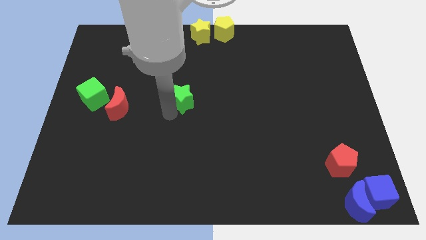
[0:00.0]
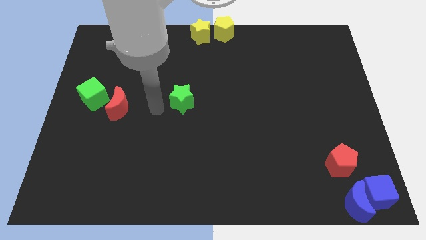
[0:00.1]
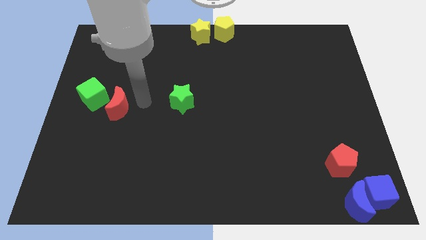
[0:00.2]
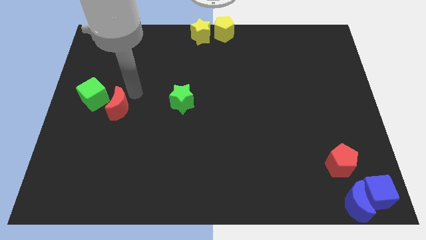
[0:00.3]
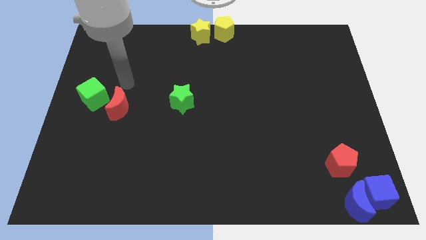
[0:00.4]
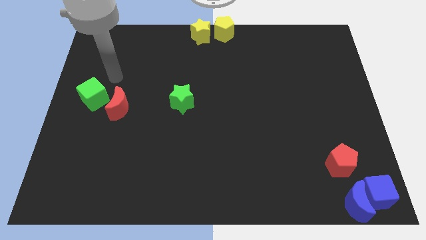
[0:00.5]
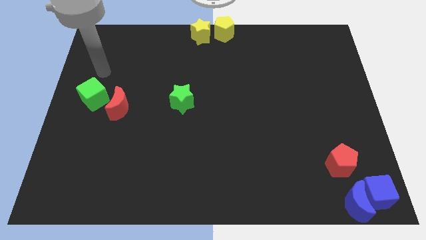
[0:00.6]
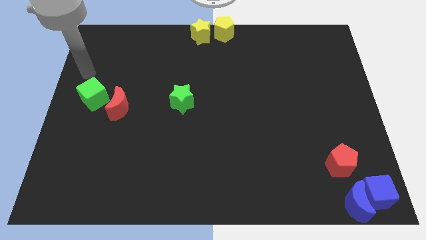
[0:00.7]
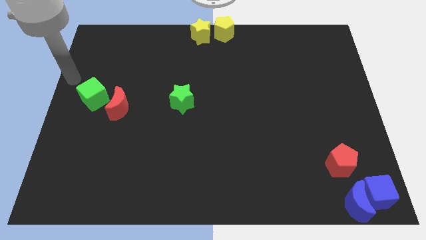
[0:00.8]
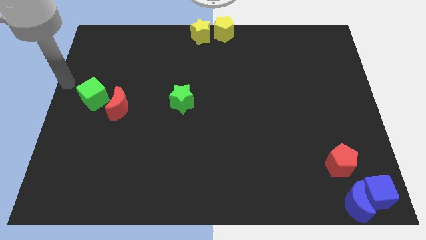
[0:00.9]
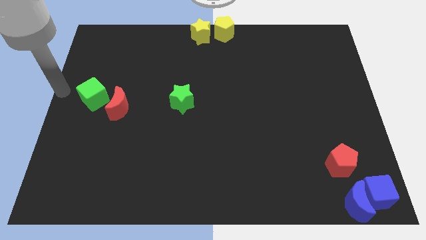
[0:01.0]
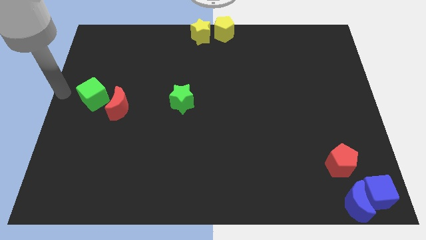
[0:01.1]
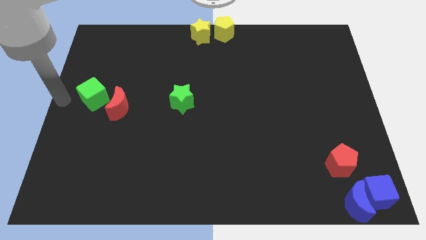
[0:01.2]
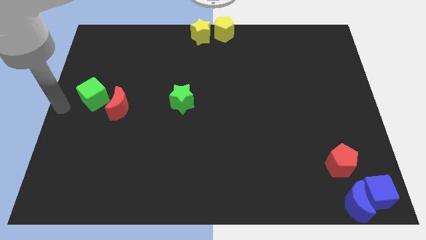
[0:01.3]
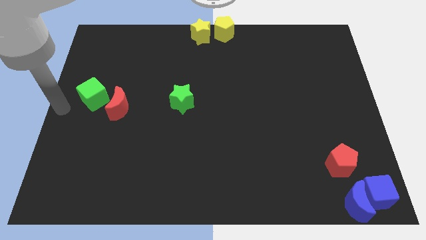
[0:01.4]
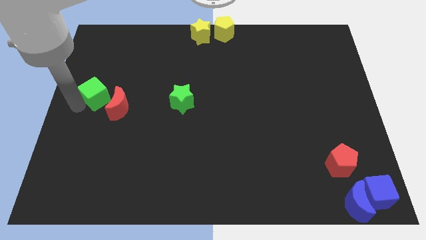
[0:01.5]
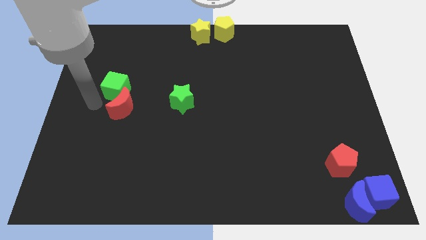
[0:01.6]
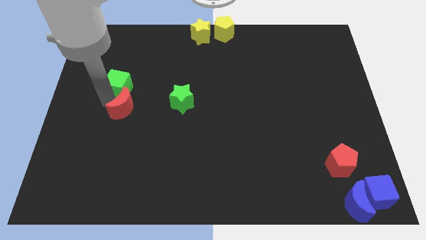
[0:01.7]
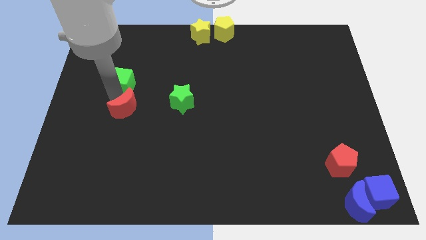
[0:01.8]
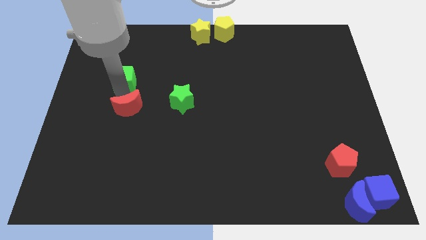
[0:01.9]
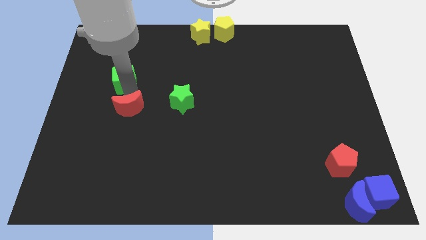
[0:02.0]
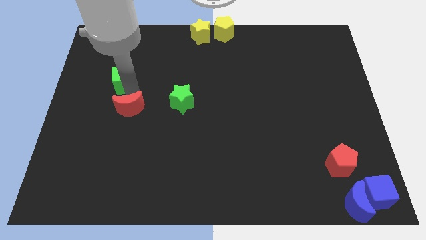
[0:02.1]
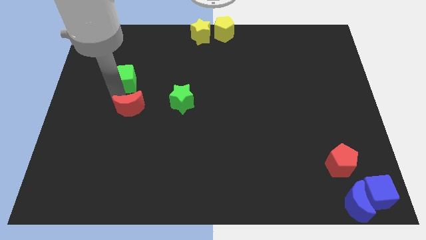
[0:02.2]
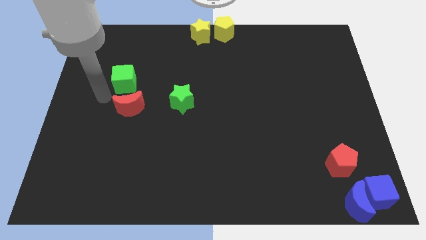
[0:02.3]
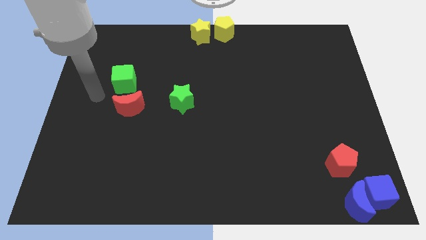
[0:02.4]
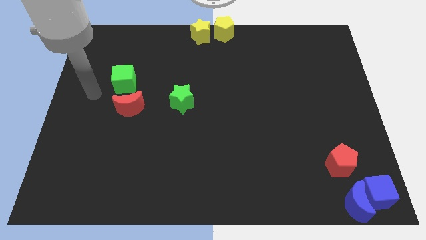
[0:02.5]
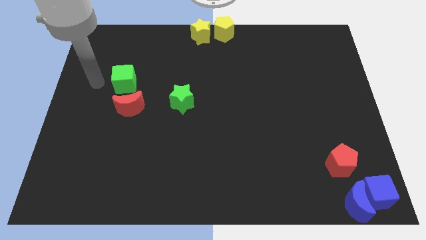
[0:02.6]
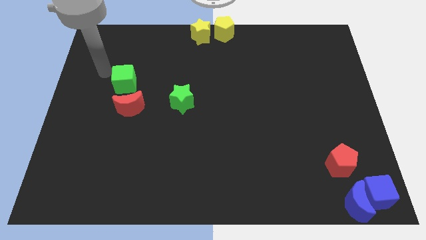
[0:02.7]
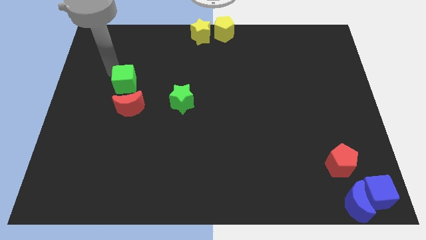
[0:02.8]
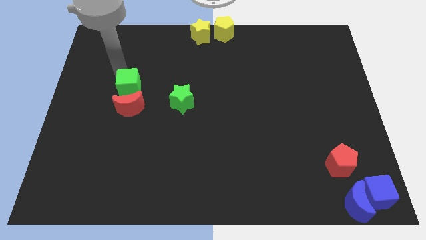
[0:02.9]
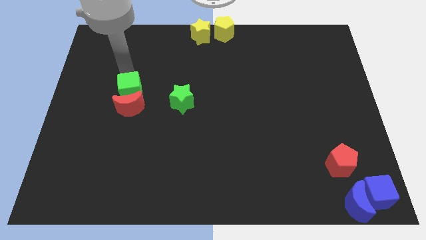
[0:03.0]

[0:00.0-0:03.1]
place the green cube and red moon to the left side of green star

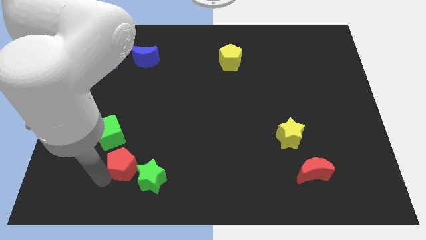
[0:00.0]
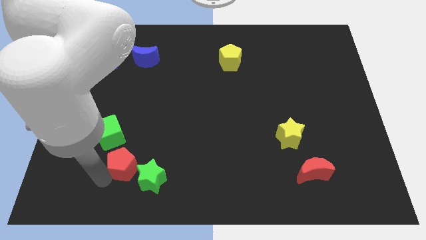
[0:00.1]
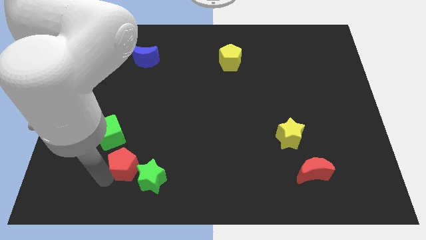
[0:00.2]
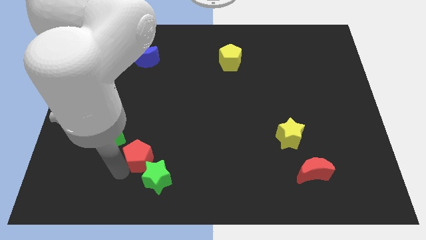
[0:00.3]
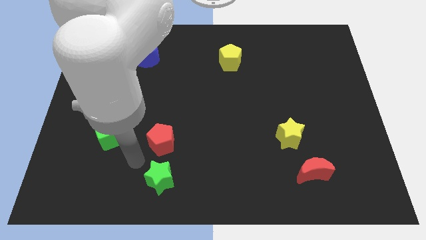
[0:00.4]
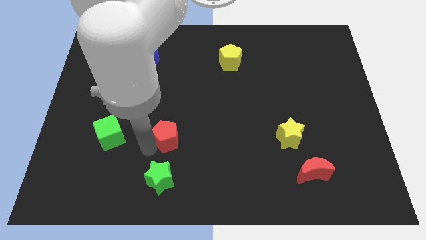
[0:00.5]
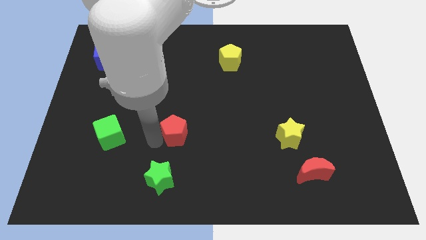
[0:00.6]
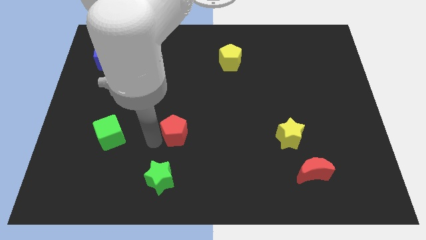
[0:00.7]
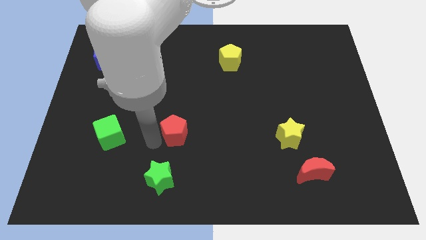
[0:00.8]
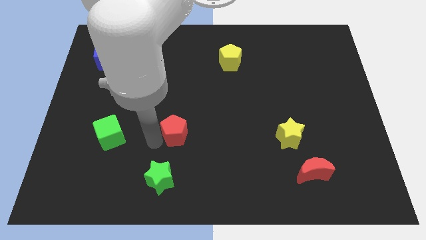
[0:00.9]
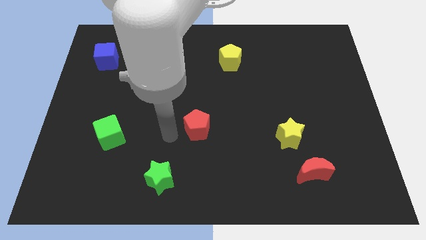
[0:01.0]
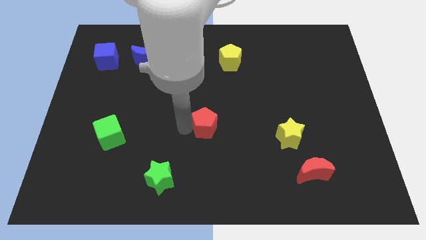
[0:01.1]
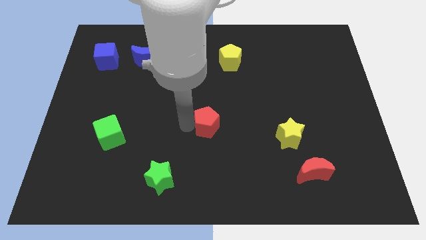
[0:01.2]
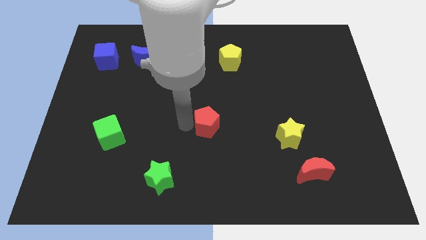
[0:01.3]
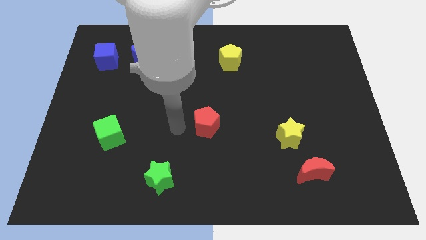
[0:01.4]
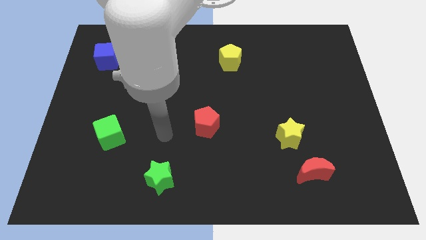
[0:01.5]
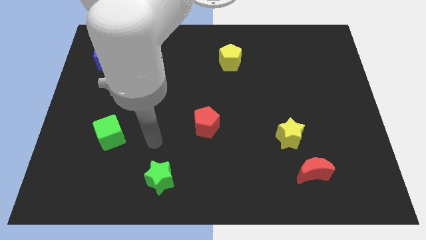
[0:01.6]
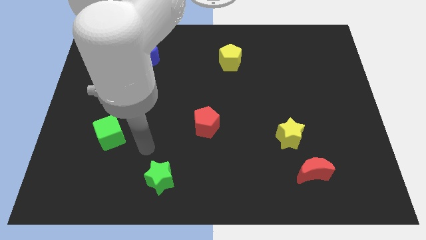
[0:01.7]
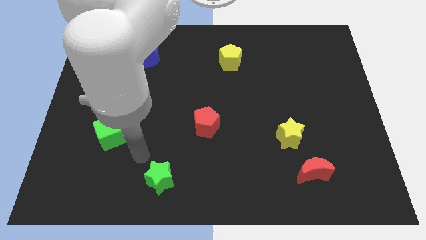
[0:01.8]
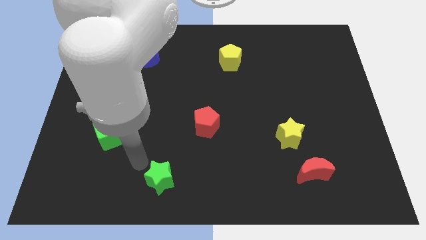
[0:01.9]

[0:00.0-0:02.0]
move the red pentagon away from the green star

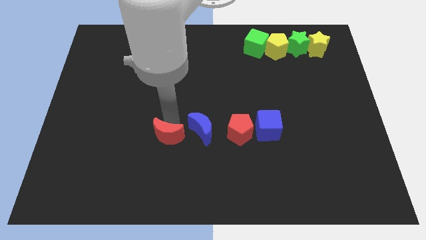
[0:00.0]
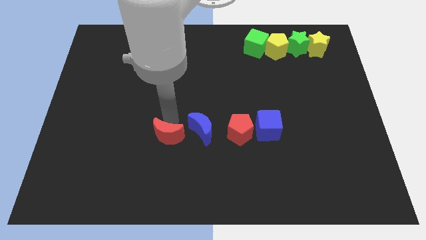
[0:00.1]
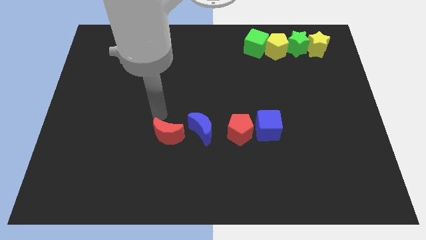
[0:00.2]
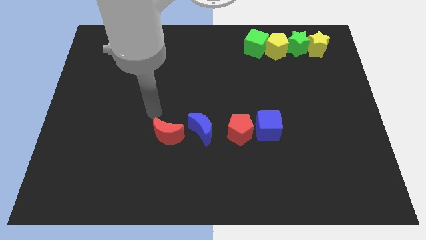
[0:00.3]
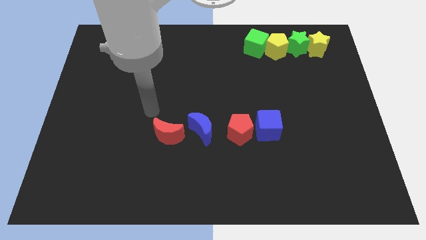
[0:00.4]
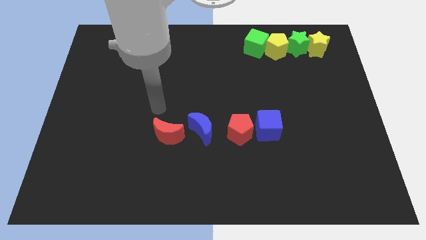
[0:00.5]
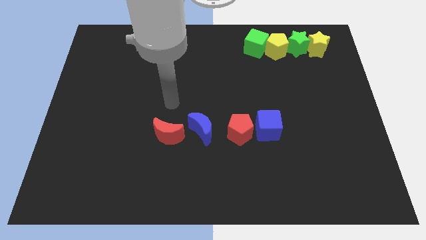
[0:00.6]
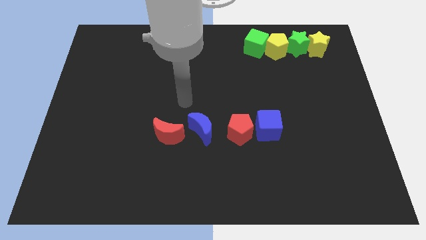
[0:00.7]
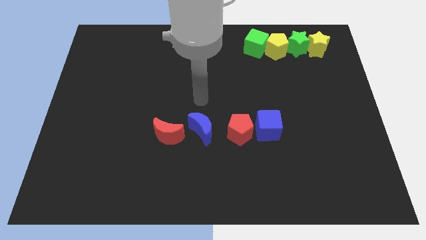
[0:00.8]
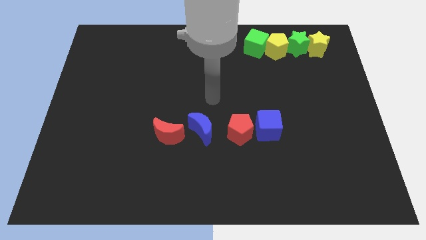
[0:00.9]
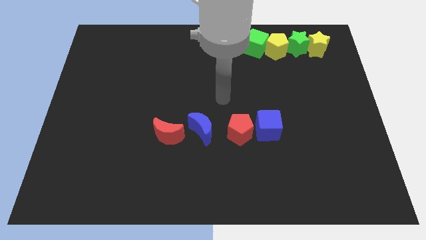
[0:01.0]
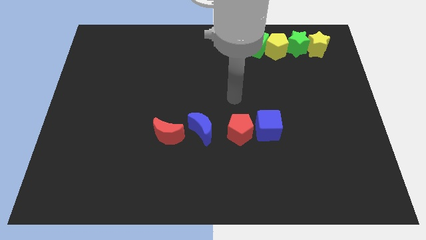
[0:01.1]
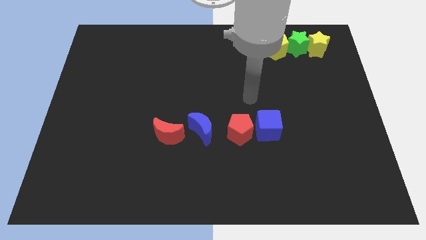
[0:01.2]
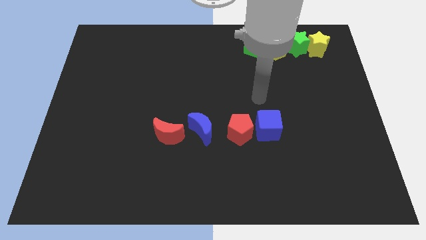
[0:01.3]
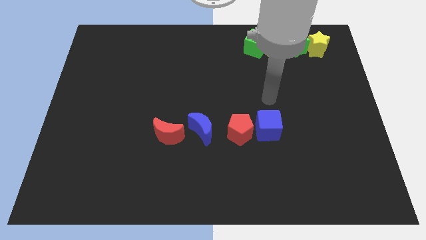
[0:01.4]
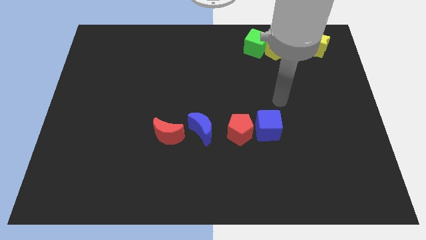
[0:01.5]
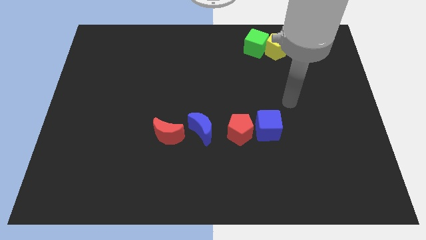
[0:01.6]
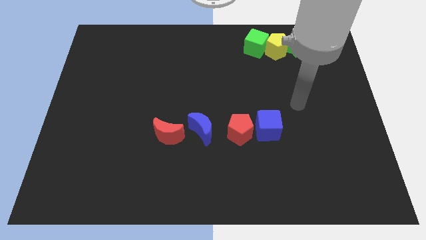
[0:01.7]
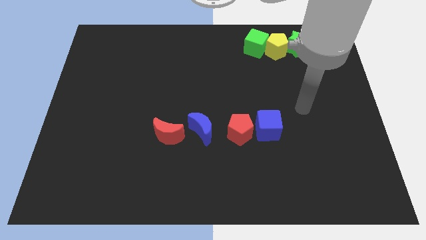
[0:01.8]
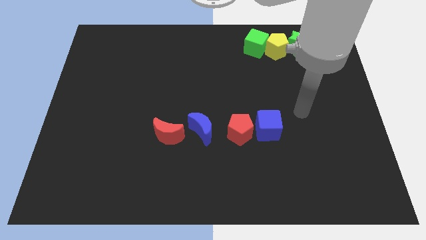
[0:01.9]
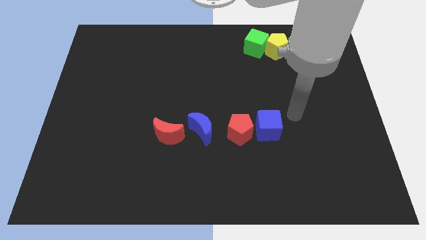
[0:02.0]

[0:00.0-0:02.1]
push your arm on the right side of the blue cube

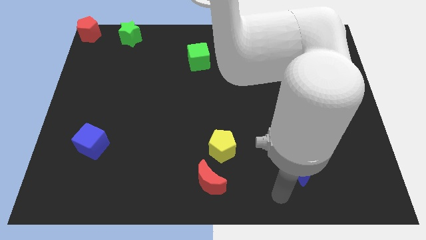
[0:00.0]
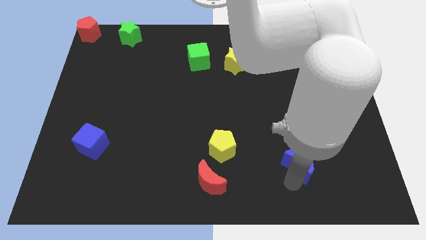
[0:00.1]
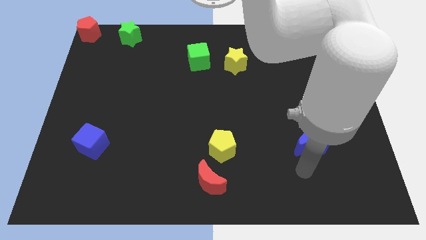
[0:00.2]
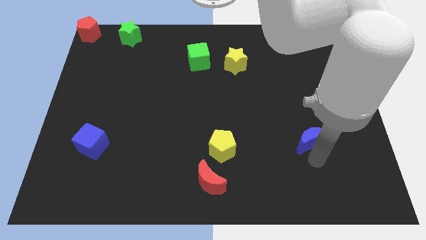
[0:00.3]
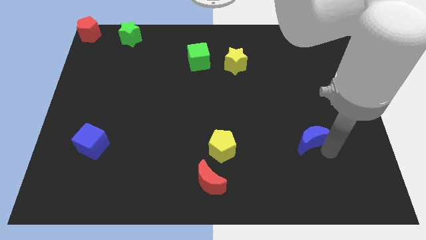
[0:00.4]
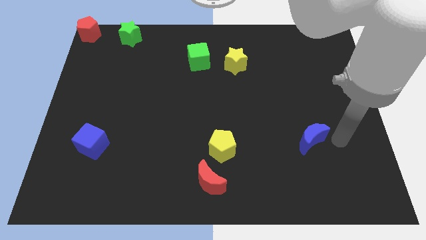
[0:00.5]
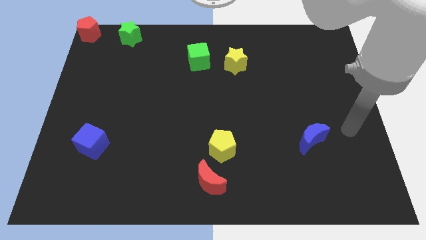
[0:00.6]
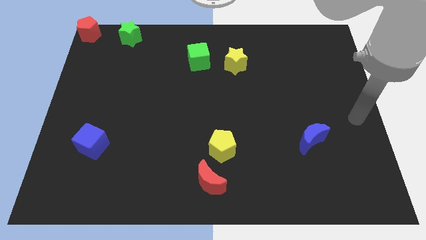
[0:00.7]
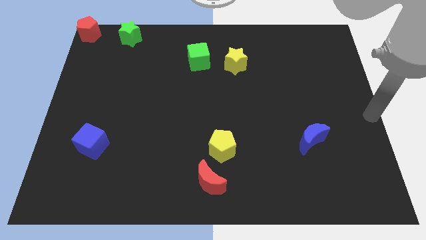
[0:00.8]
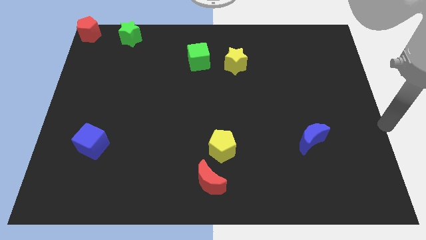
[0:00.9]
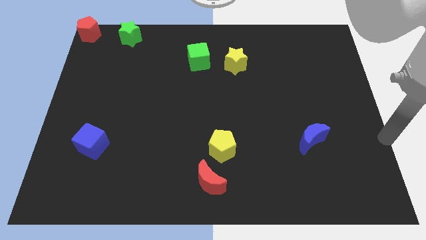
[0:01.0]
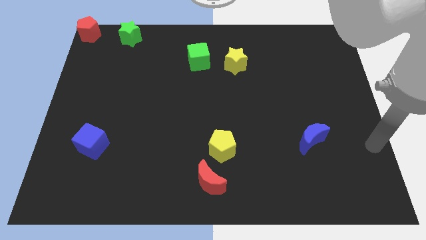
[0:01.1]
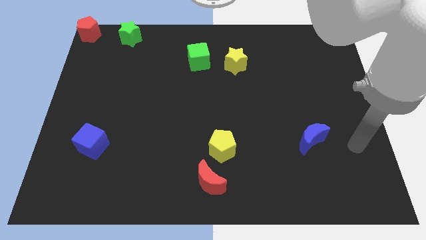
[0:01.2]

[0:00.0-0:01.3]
slightly move the blue moon to the right side

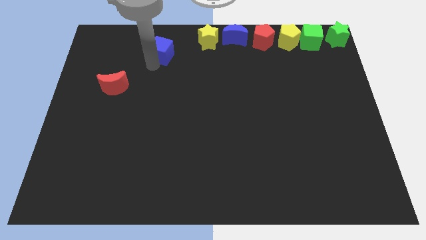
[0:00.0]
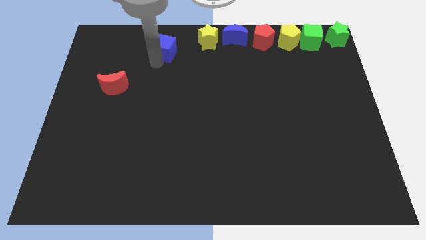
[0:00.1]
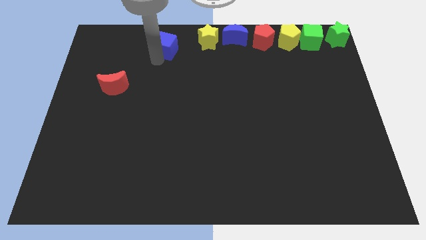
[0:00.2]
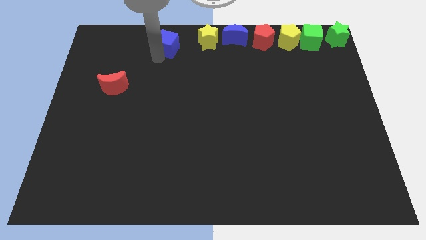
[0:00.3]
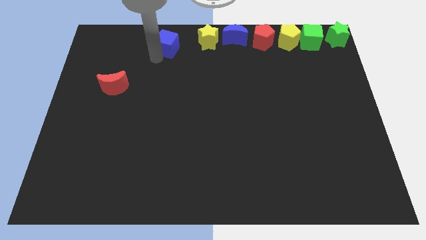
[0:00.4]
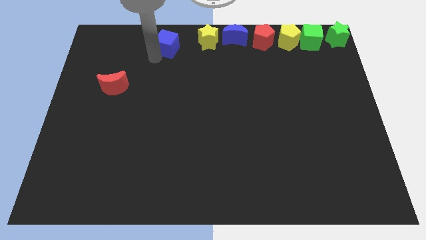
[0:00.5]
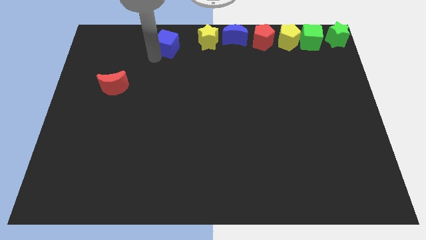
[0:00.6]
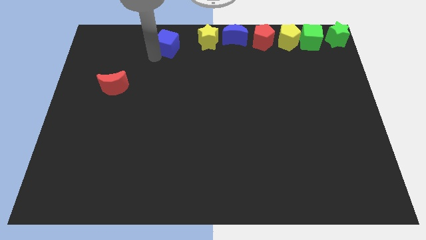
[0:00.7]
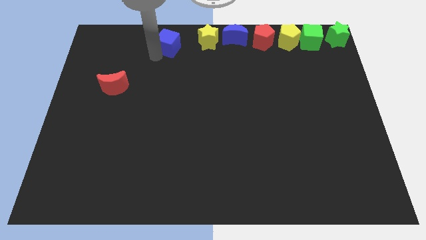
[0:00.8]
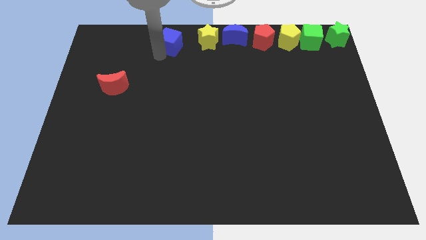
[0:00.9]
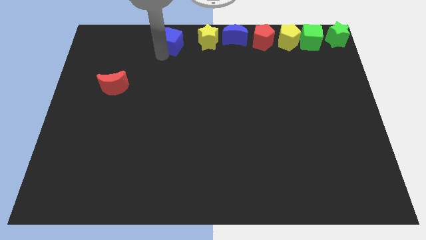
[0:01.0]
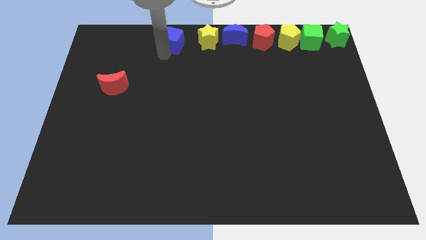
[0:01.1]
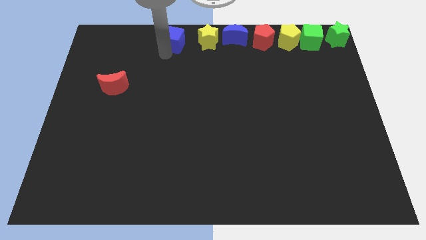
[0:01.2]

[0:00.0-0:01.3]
push the blue cube parallel to the left of the yellow star
